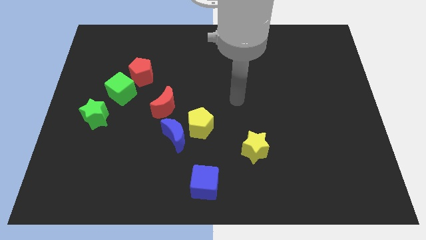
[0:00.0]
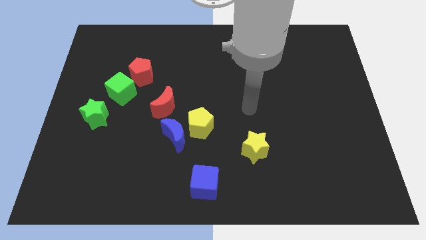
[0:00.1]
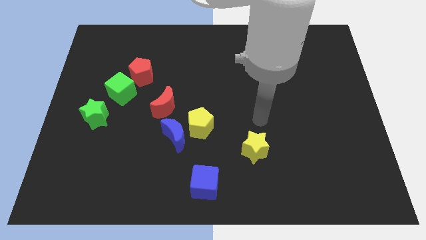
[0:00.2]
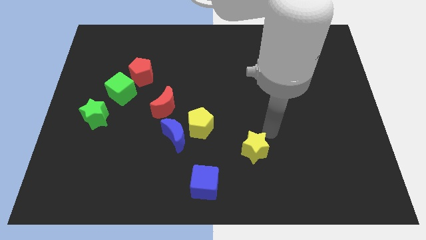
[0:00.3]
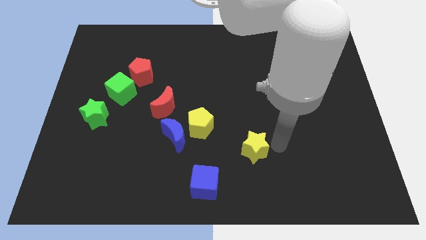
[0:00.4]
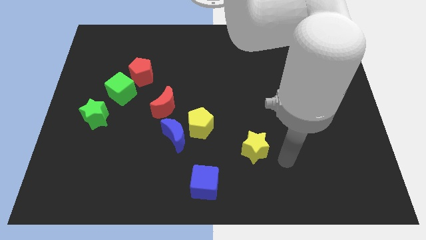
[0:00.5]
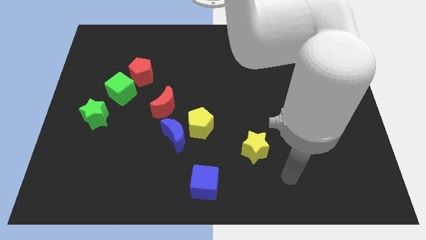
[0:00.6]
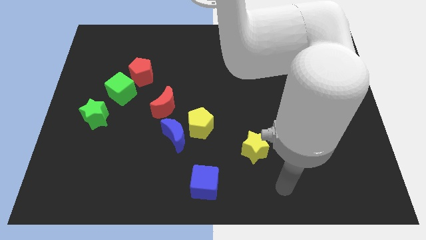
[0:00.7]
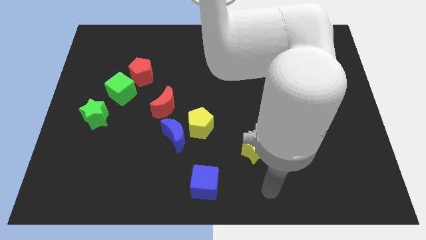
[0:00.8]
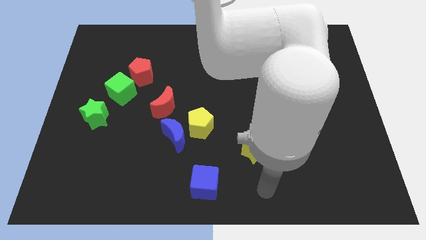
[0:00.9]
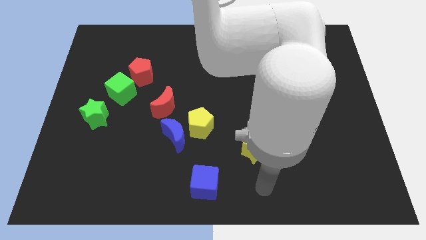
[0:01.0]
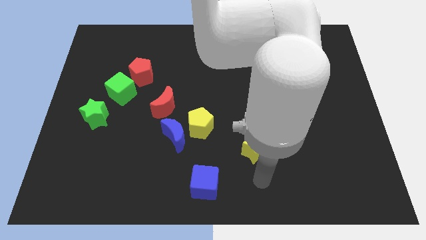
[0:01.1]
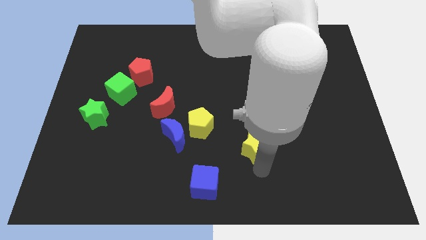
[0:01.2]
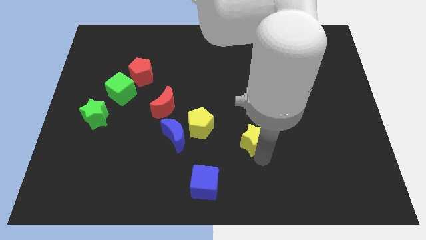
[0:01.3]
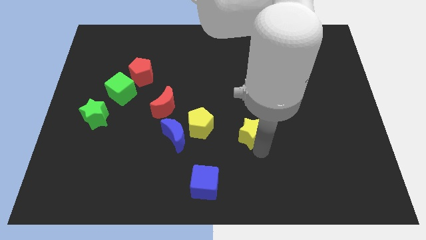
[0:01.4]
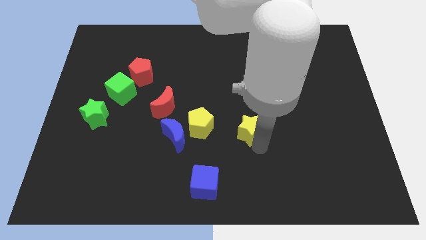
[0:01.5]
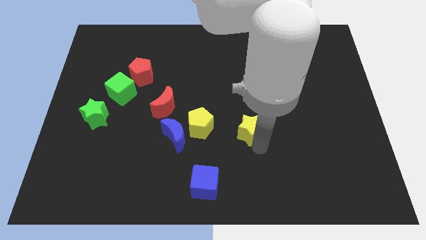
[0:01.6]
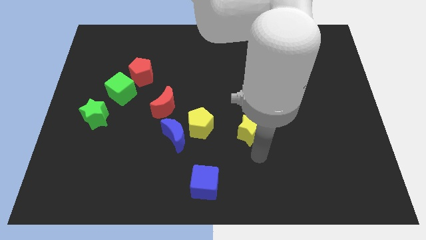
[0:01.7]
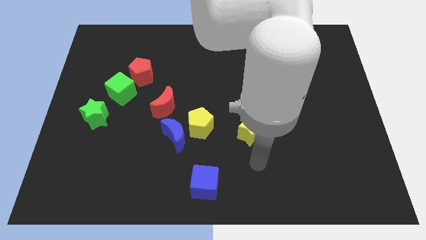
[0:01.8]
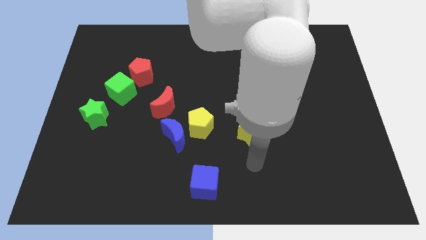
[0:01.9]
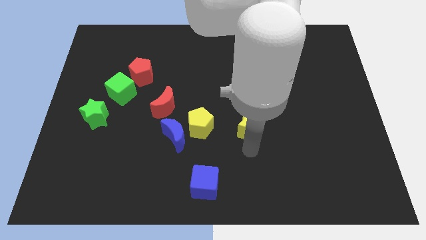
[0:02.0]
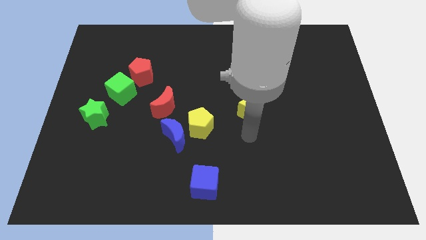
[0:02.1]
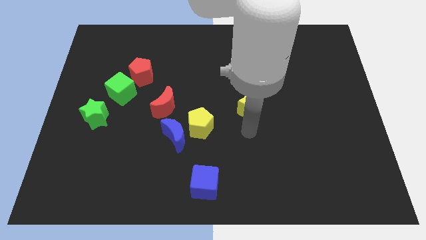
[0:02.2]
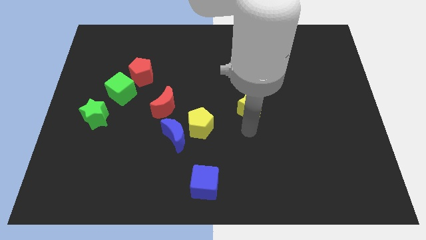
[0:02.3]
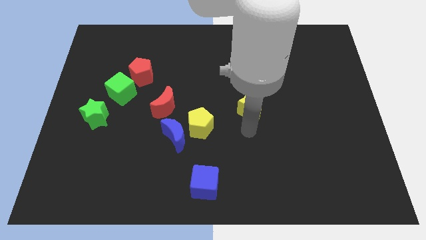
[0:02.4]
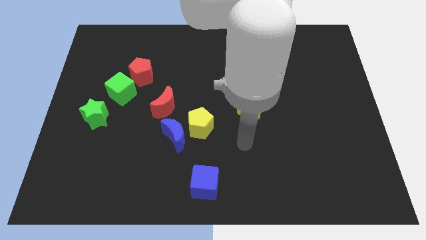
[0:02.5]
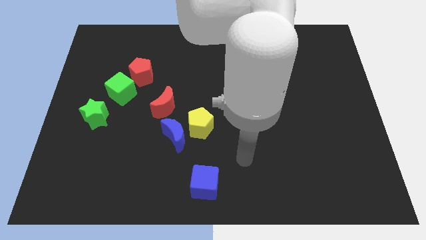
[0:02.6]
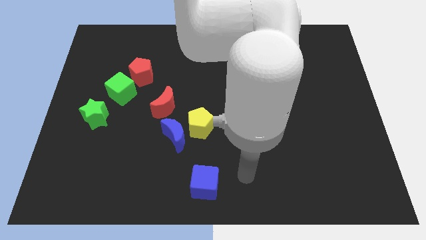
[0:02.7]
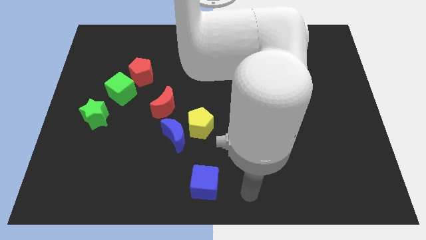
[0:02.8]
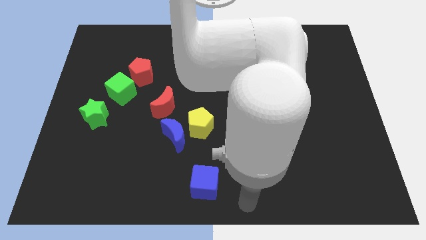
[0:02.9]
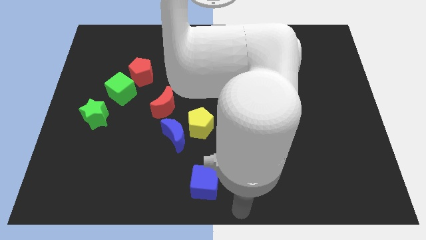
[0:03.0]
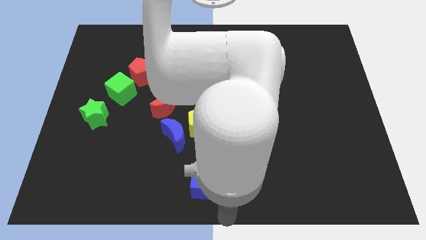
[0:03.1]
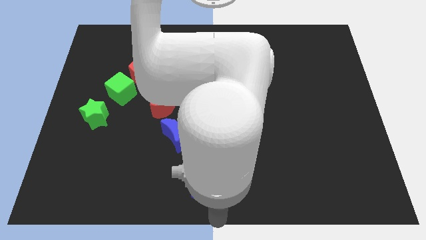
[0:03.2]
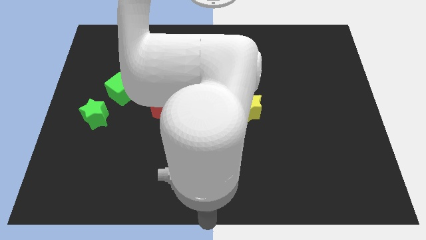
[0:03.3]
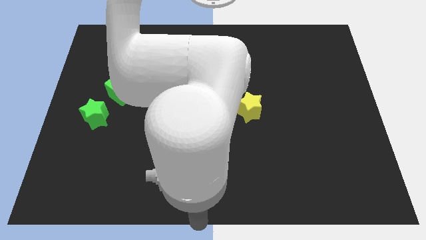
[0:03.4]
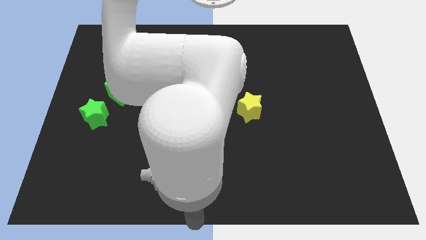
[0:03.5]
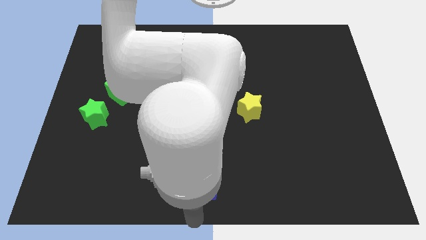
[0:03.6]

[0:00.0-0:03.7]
place yellow star to the center of the board

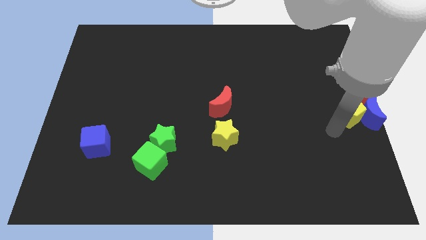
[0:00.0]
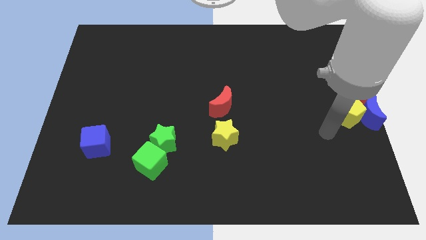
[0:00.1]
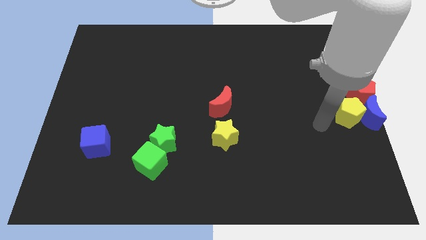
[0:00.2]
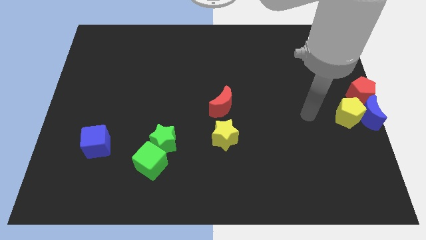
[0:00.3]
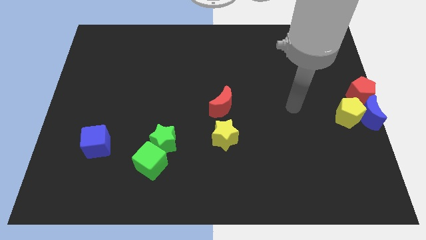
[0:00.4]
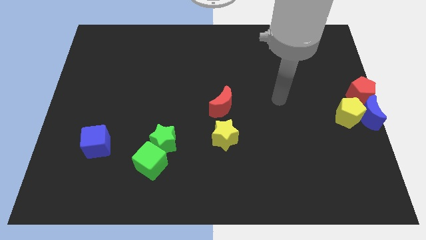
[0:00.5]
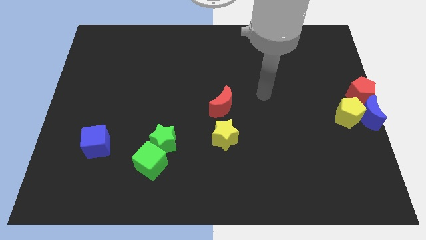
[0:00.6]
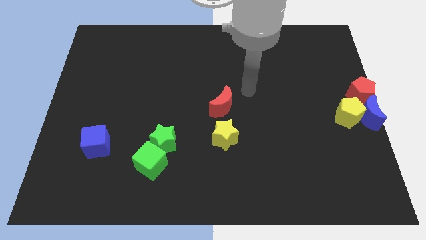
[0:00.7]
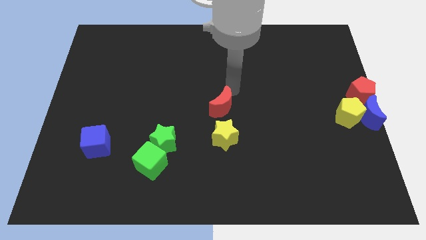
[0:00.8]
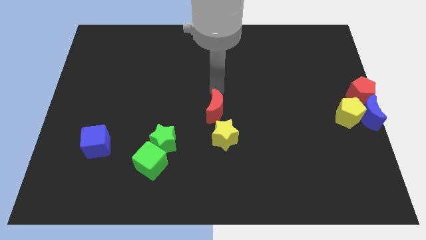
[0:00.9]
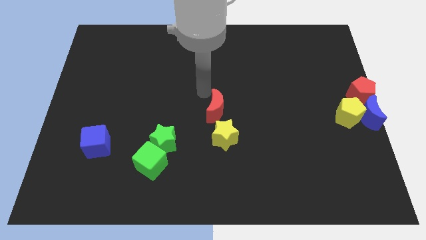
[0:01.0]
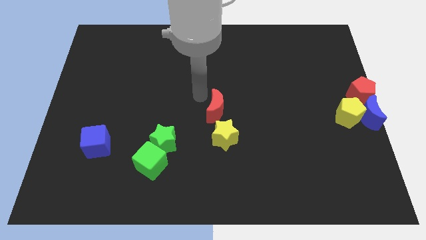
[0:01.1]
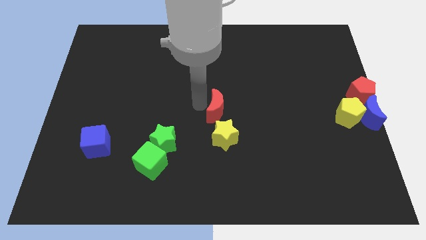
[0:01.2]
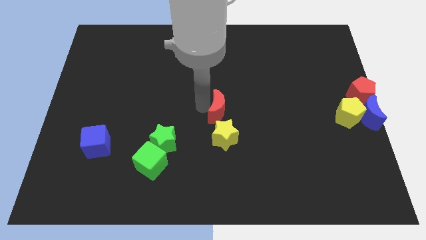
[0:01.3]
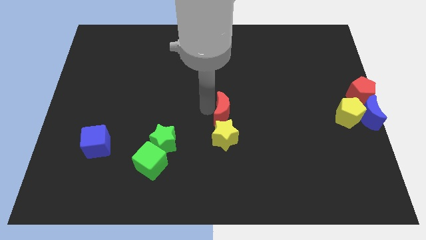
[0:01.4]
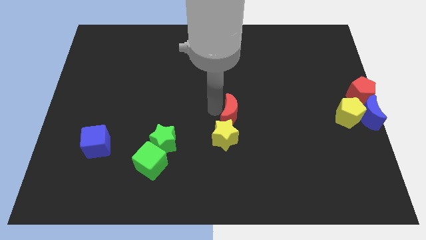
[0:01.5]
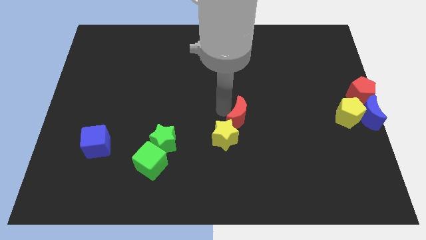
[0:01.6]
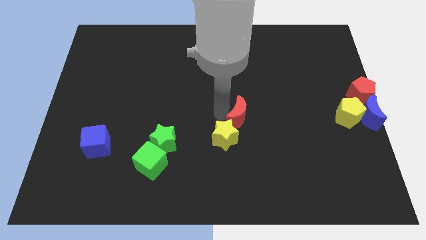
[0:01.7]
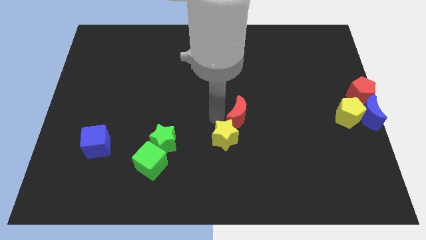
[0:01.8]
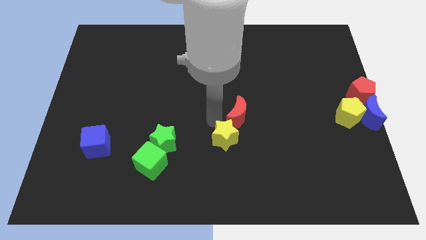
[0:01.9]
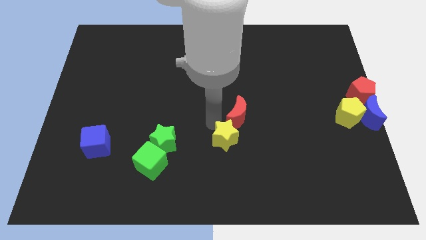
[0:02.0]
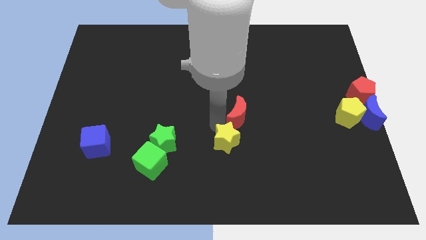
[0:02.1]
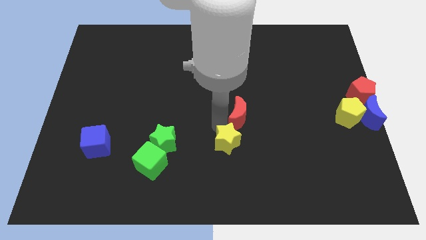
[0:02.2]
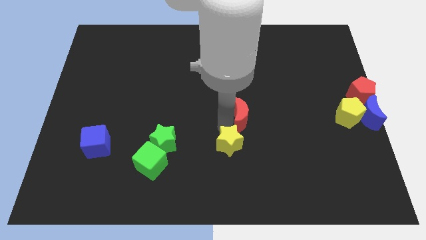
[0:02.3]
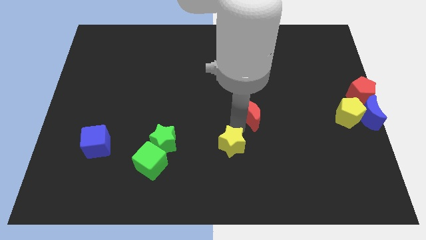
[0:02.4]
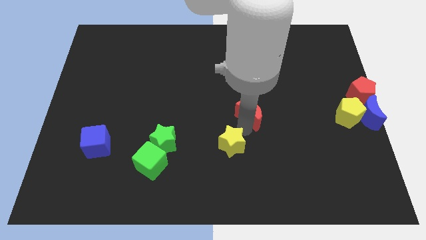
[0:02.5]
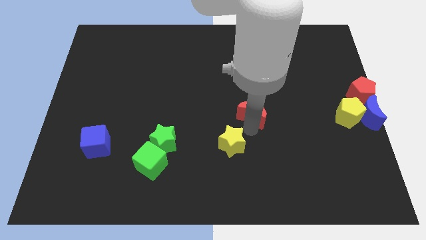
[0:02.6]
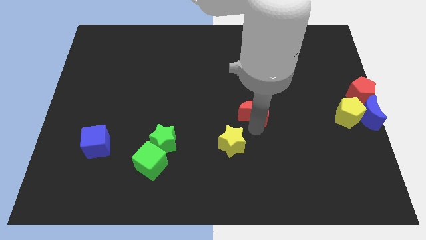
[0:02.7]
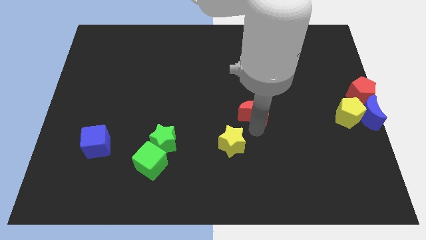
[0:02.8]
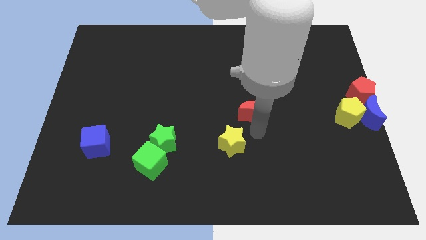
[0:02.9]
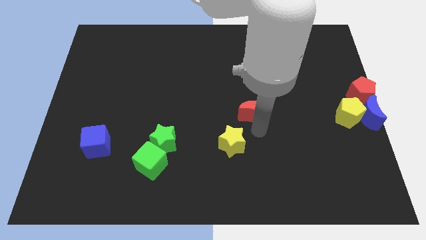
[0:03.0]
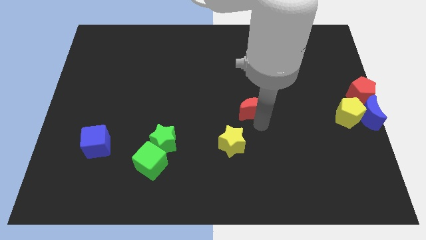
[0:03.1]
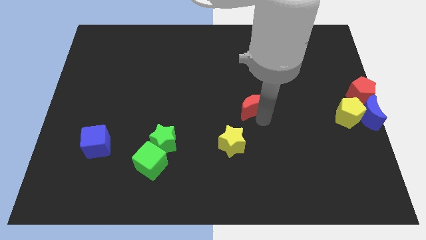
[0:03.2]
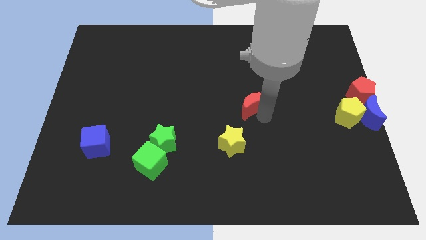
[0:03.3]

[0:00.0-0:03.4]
move the red crescent to the top right of the yellow star

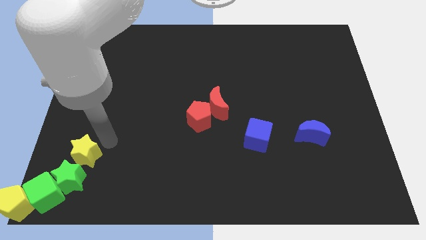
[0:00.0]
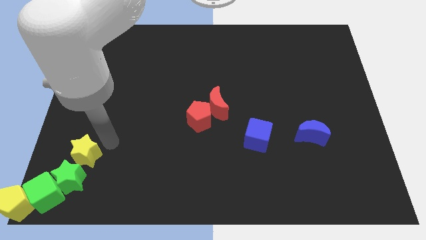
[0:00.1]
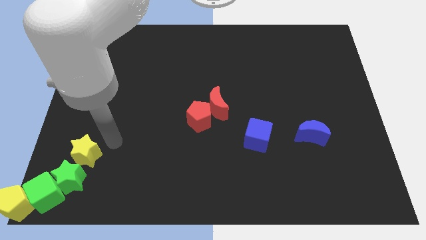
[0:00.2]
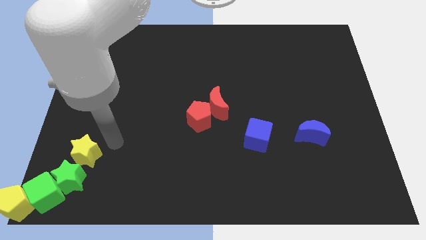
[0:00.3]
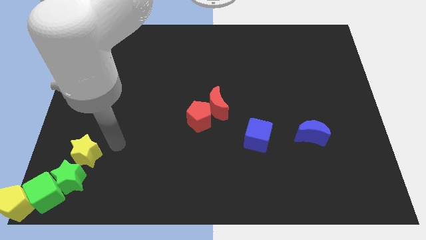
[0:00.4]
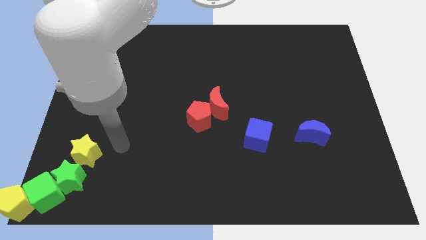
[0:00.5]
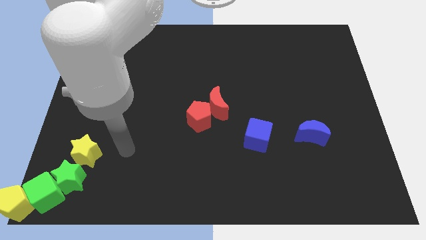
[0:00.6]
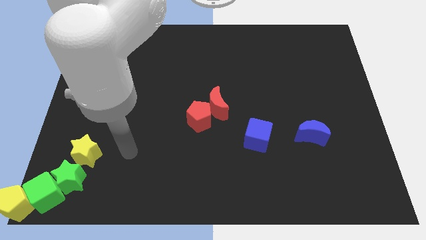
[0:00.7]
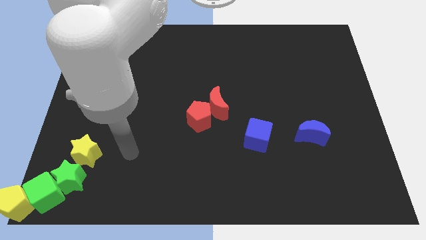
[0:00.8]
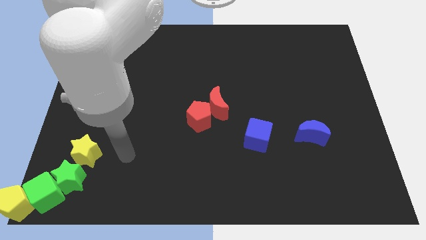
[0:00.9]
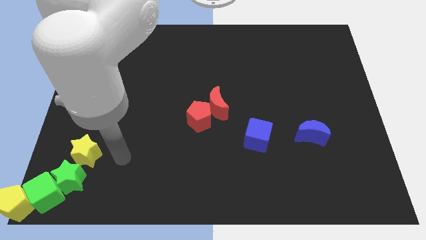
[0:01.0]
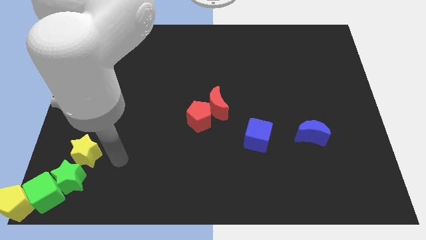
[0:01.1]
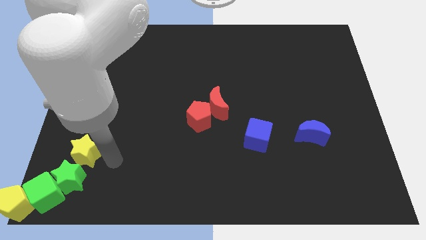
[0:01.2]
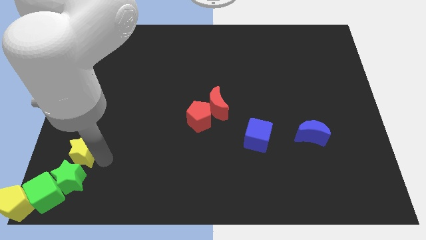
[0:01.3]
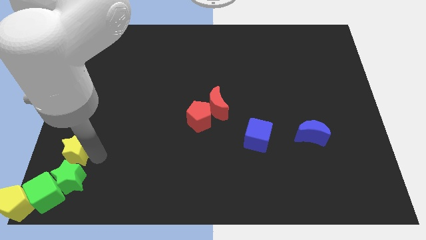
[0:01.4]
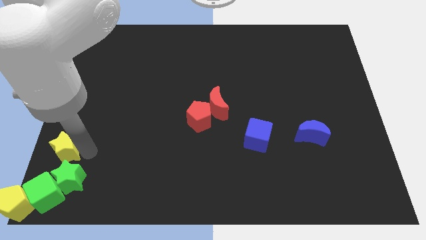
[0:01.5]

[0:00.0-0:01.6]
place yellow star above the green star

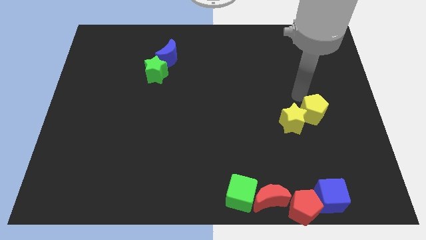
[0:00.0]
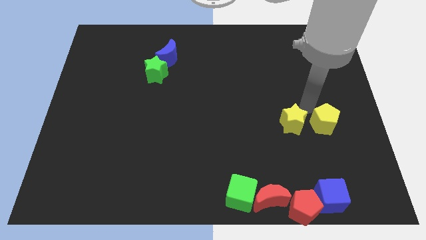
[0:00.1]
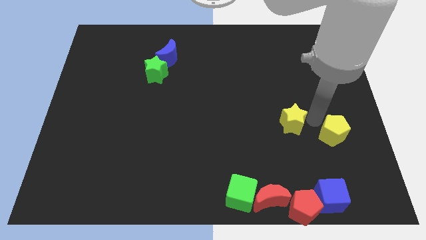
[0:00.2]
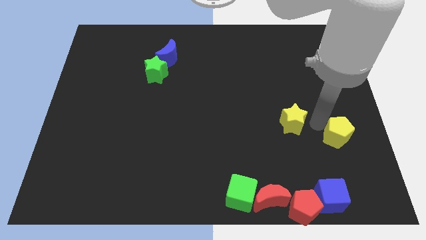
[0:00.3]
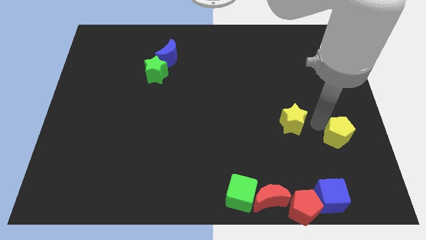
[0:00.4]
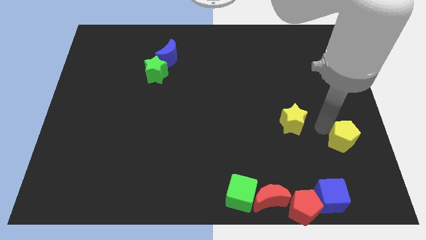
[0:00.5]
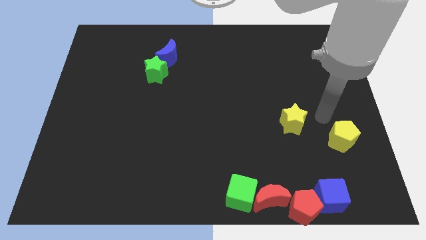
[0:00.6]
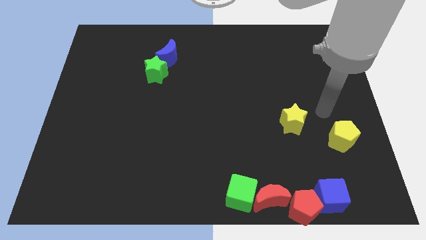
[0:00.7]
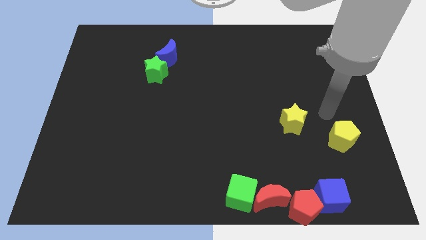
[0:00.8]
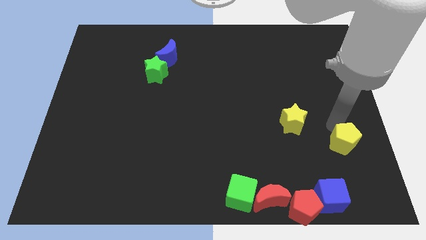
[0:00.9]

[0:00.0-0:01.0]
separate the yellow pentagon from the yellow star
